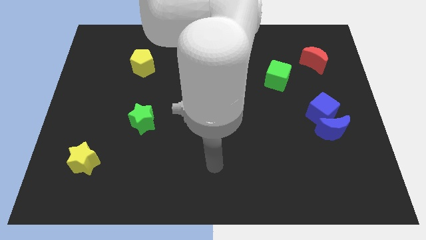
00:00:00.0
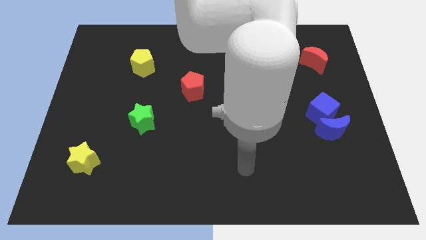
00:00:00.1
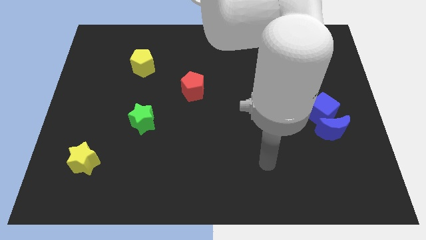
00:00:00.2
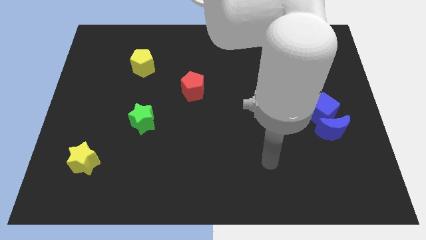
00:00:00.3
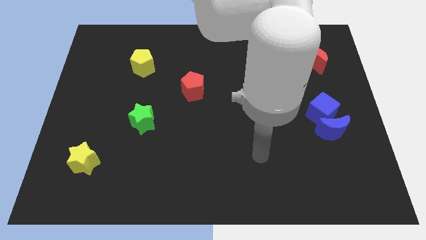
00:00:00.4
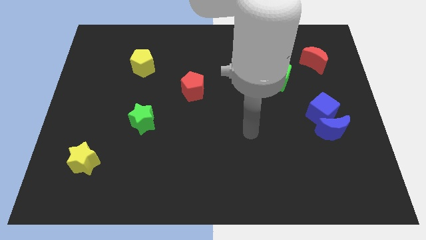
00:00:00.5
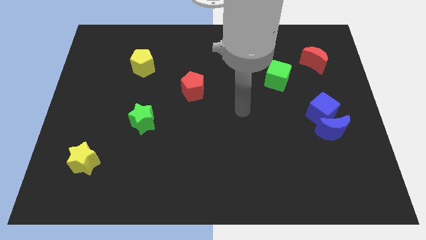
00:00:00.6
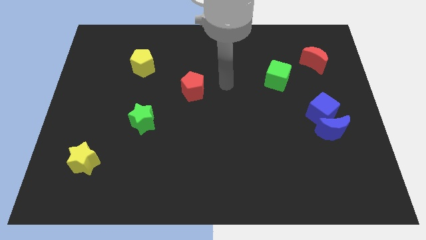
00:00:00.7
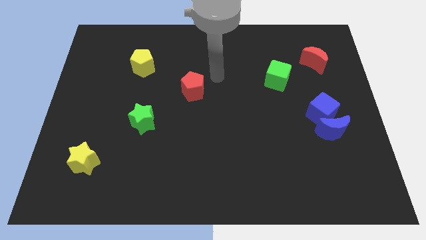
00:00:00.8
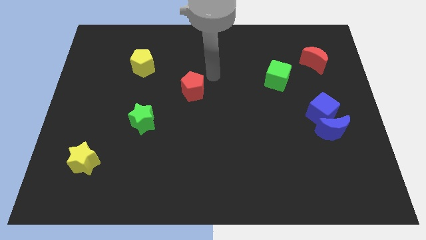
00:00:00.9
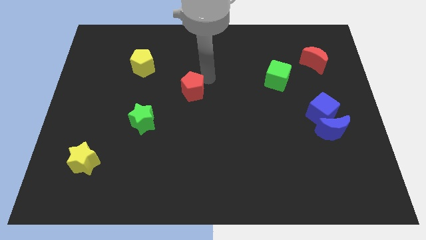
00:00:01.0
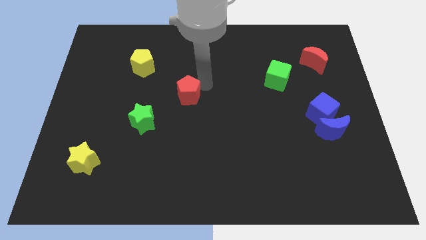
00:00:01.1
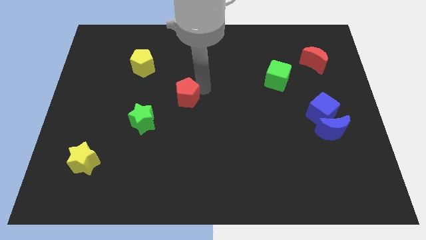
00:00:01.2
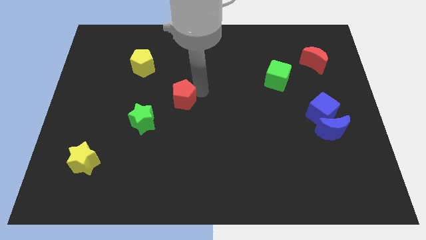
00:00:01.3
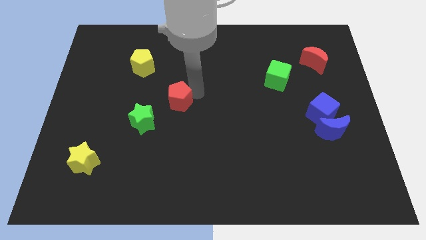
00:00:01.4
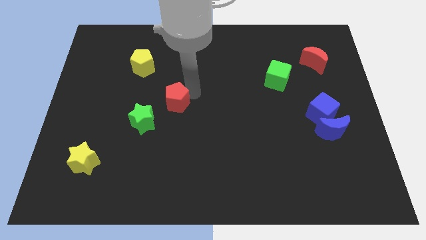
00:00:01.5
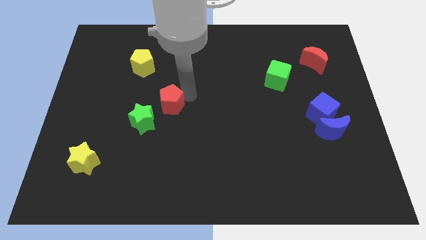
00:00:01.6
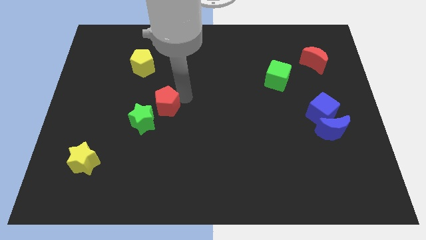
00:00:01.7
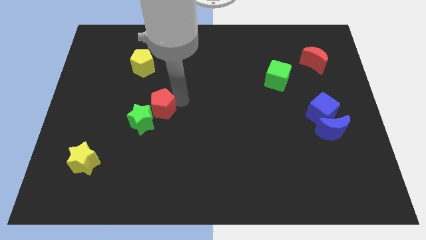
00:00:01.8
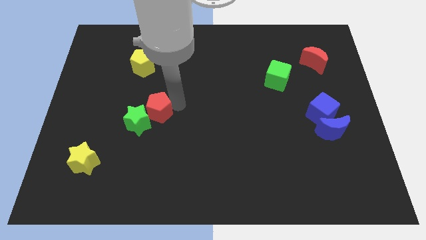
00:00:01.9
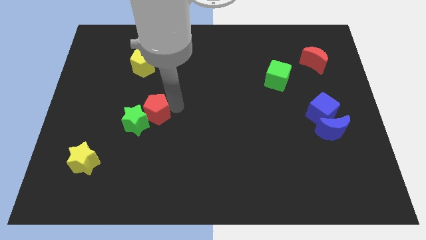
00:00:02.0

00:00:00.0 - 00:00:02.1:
move the red pentagon close to the green star

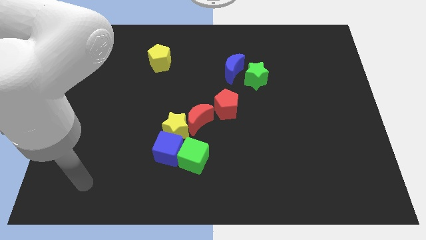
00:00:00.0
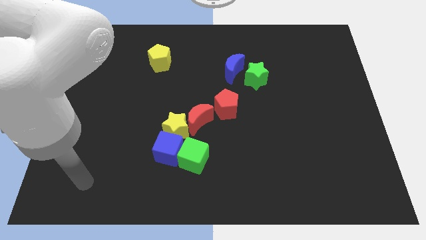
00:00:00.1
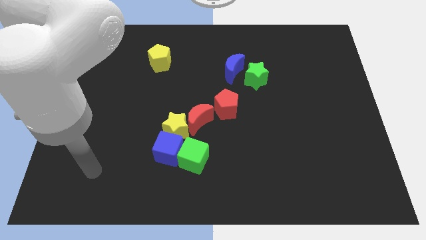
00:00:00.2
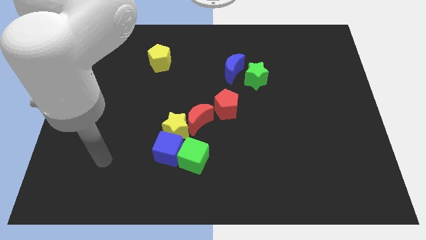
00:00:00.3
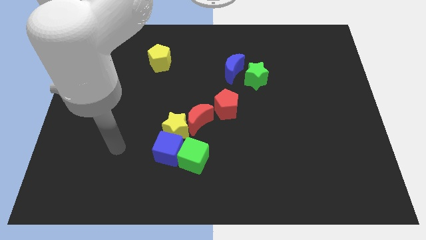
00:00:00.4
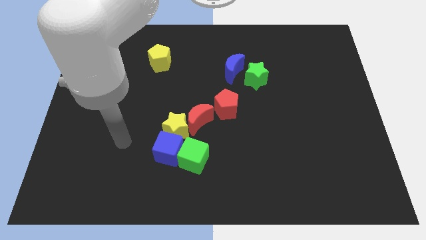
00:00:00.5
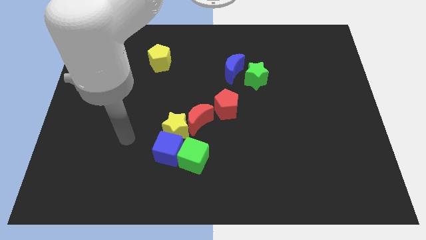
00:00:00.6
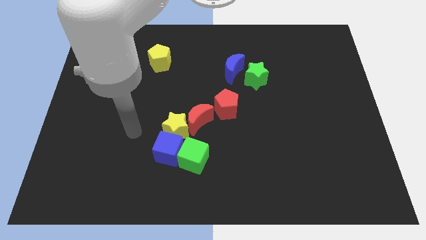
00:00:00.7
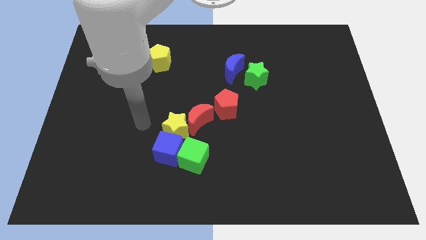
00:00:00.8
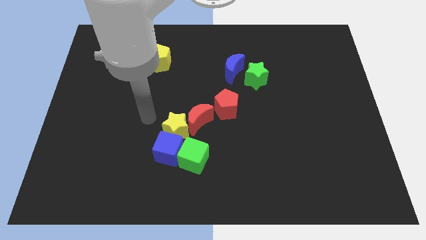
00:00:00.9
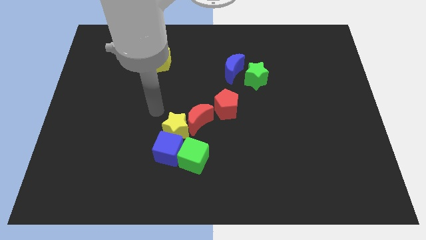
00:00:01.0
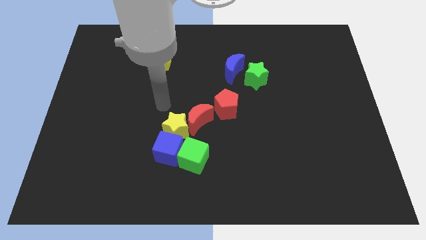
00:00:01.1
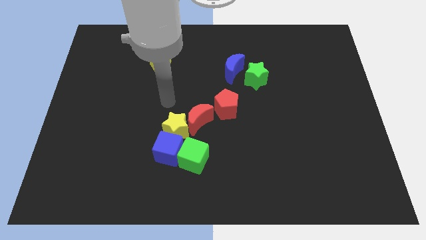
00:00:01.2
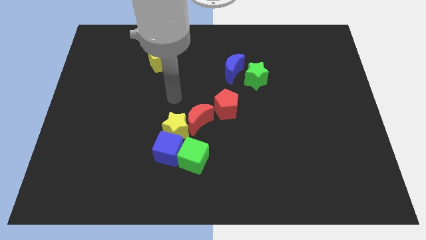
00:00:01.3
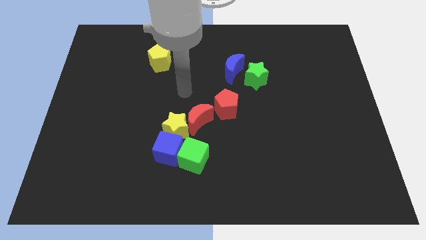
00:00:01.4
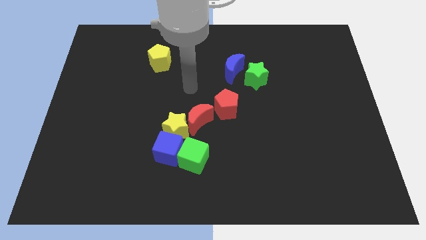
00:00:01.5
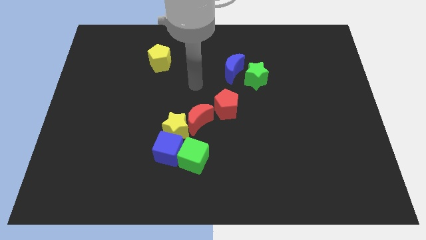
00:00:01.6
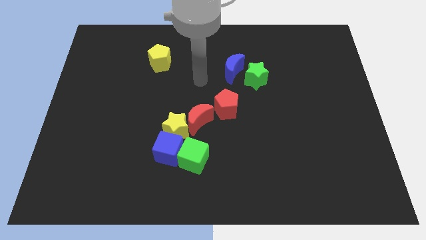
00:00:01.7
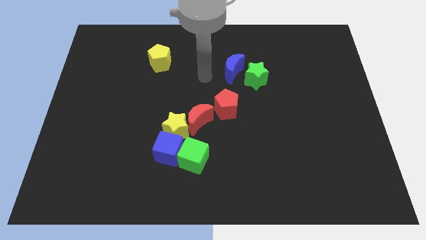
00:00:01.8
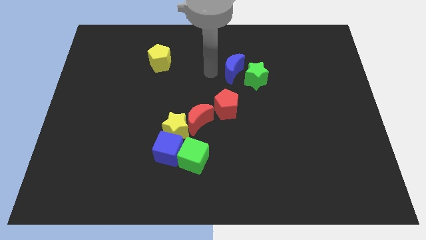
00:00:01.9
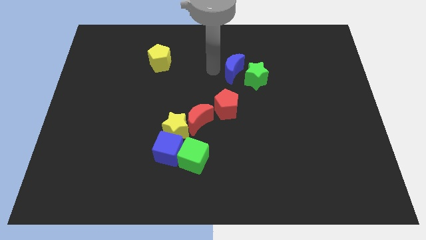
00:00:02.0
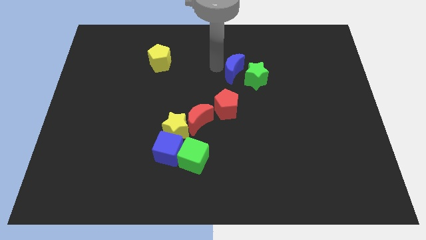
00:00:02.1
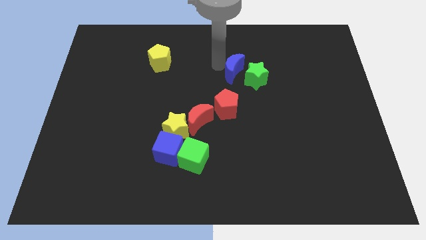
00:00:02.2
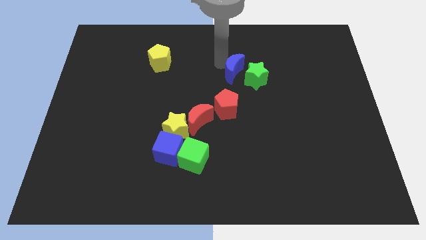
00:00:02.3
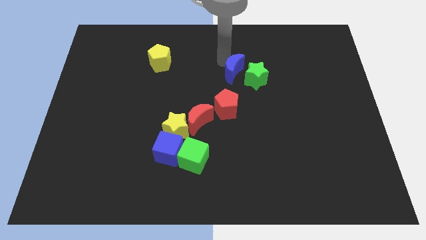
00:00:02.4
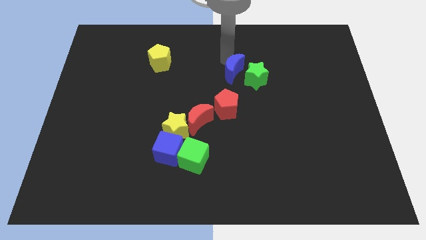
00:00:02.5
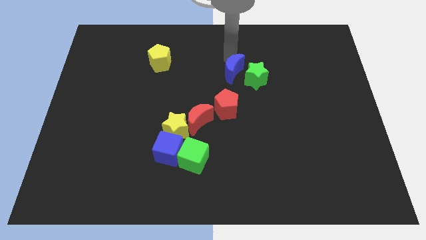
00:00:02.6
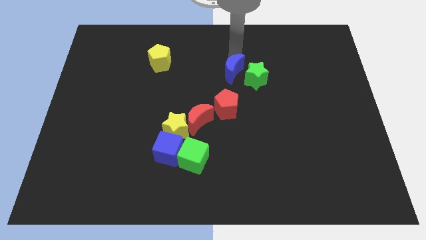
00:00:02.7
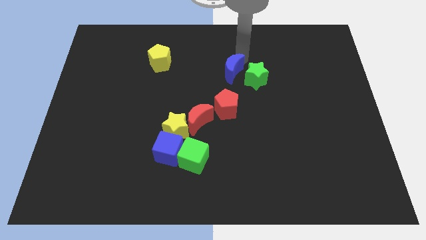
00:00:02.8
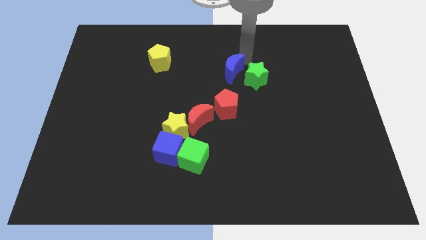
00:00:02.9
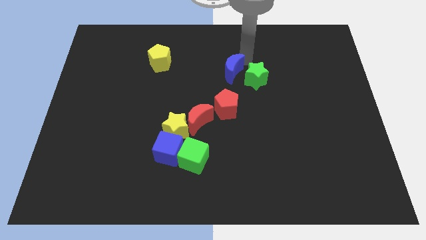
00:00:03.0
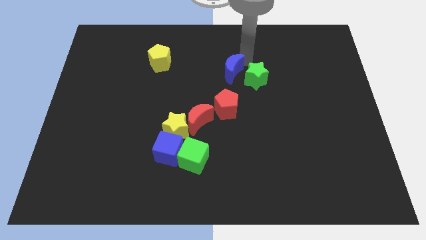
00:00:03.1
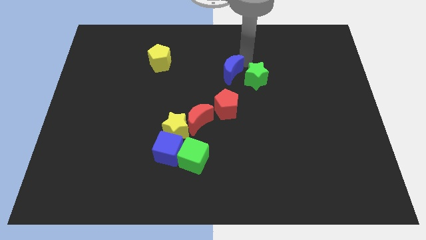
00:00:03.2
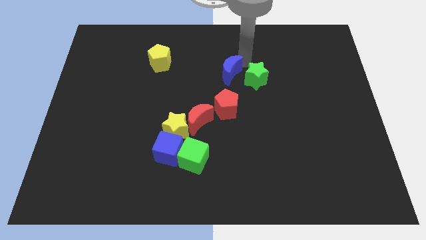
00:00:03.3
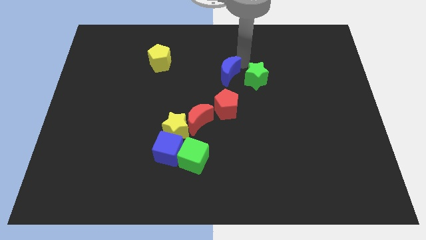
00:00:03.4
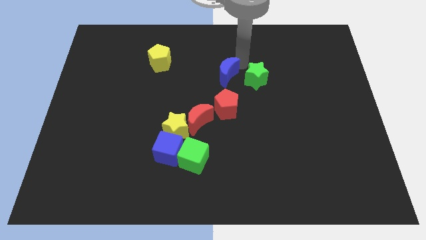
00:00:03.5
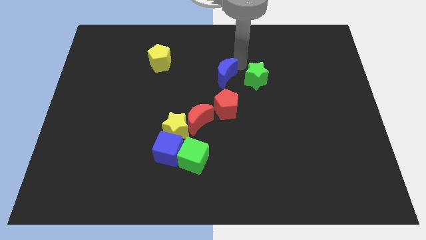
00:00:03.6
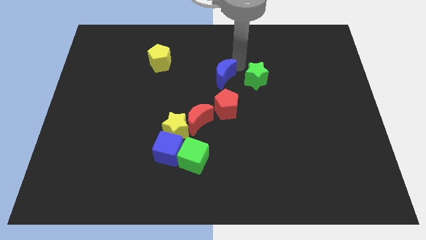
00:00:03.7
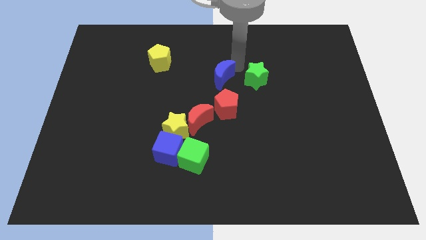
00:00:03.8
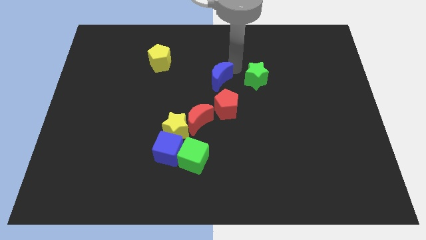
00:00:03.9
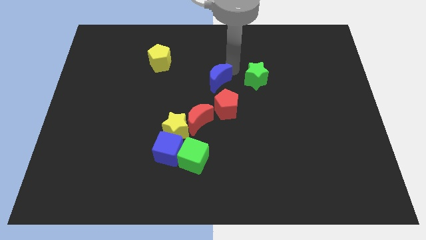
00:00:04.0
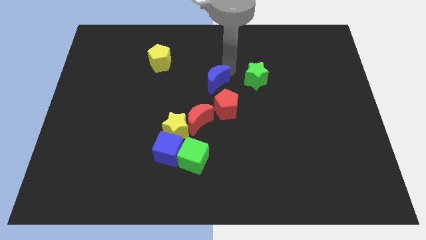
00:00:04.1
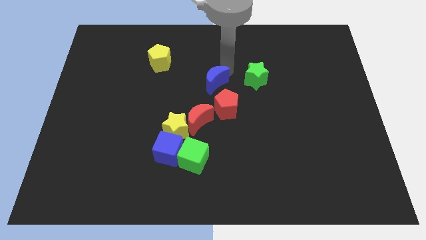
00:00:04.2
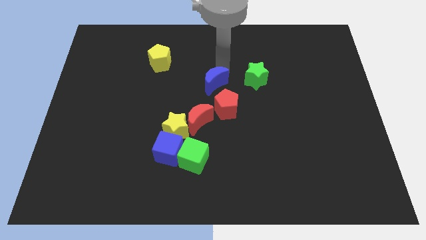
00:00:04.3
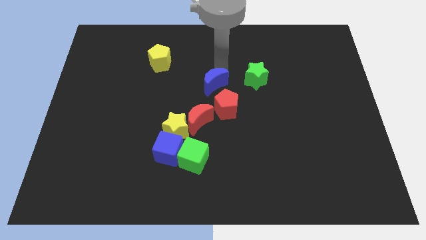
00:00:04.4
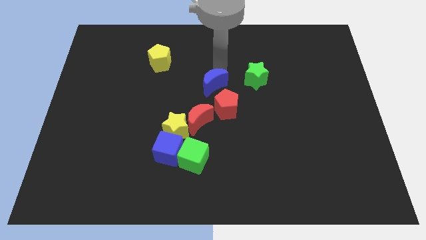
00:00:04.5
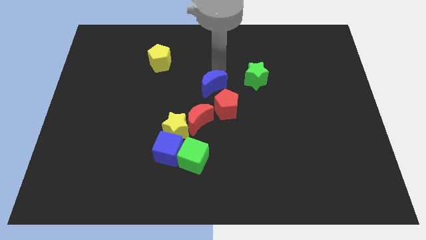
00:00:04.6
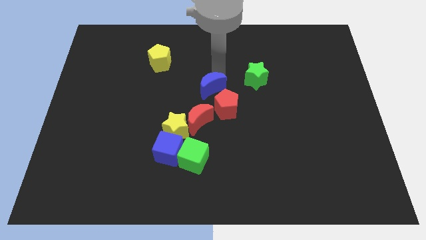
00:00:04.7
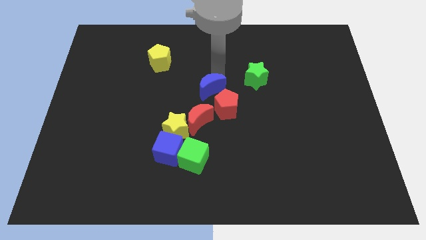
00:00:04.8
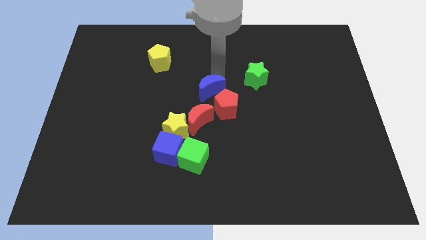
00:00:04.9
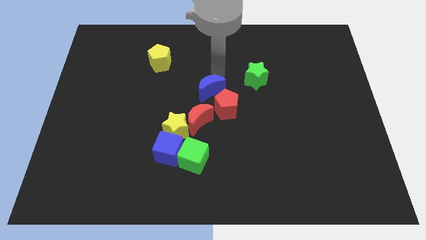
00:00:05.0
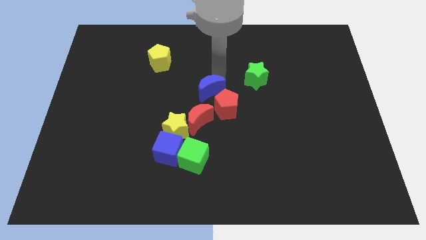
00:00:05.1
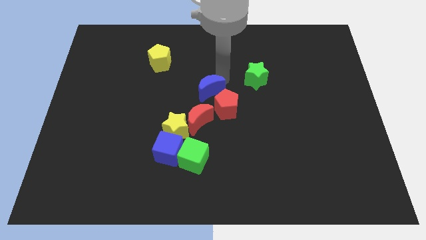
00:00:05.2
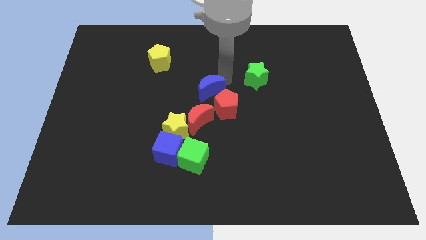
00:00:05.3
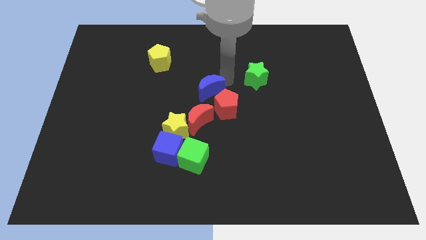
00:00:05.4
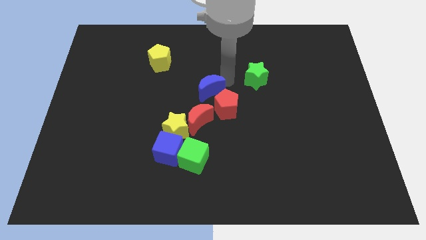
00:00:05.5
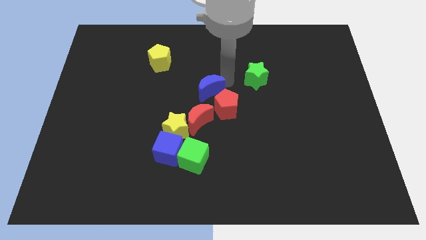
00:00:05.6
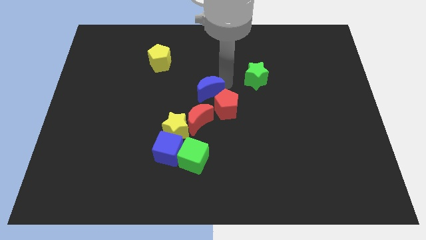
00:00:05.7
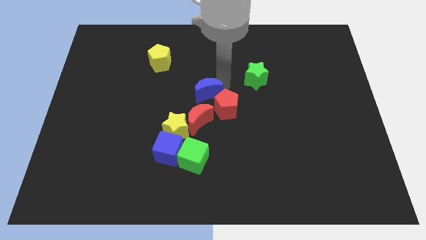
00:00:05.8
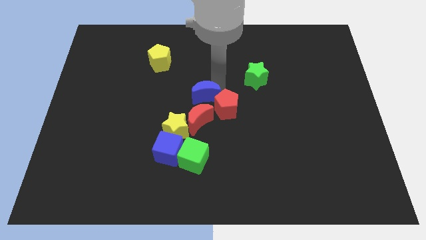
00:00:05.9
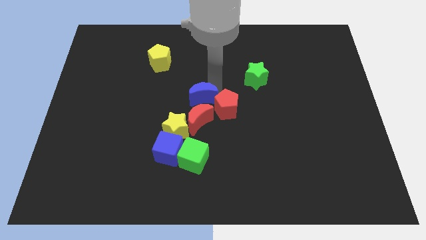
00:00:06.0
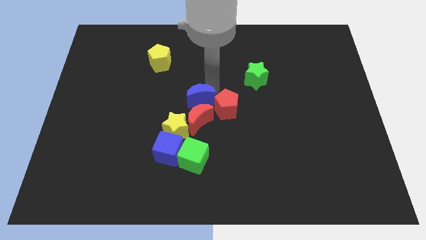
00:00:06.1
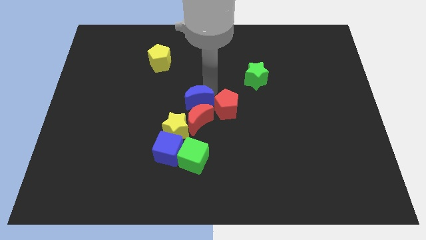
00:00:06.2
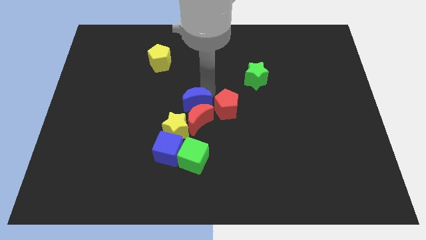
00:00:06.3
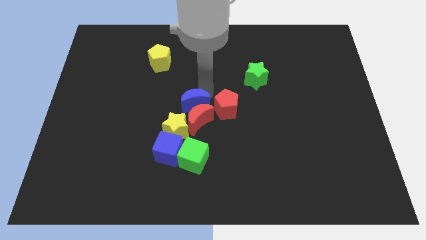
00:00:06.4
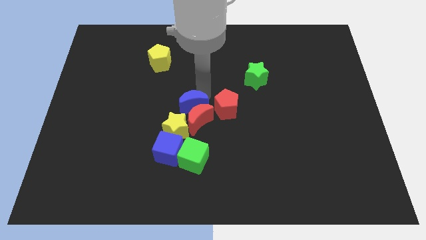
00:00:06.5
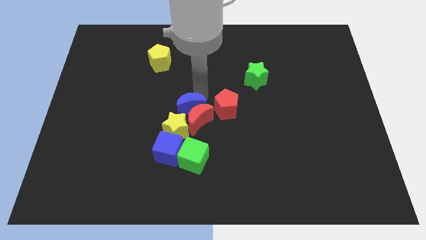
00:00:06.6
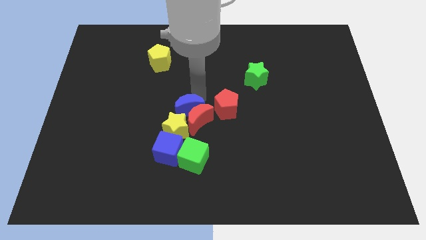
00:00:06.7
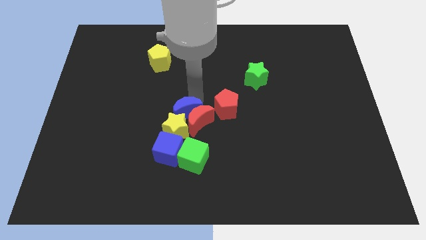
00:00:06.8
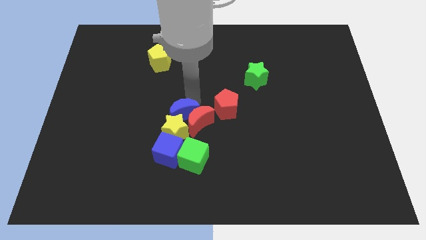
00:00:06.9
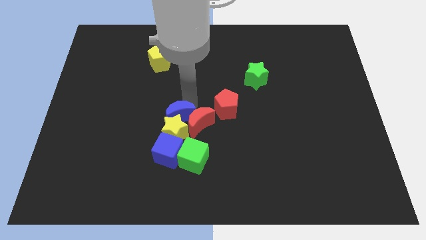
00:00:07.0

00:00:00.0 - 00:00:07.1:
push the blue moon towards the yellow star
